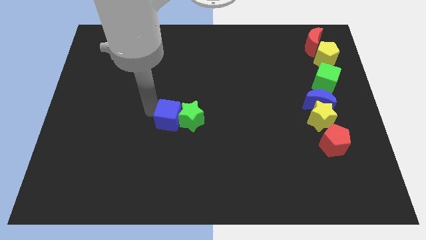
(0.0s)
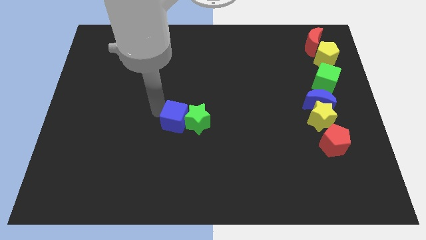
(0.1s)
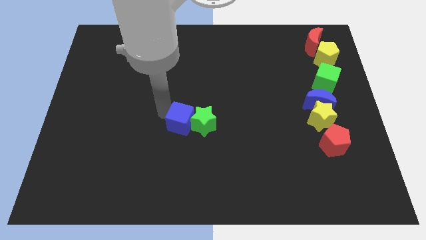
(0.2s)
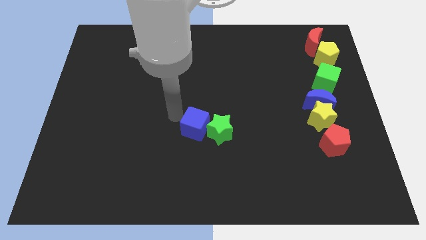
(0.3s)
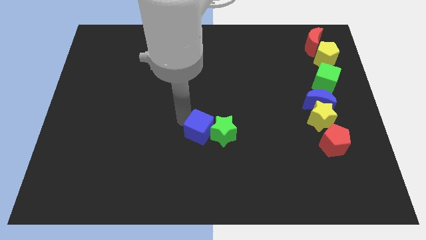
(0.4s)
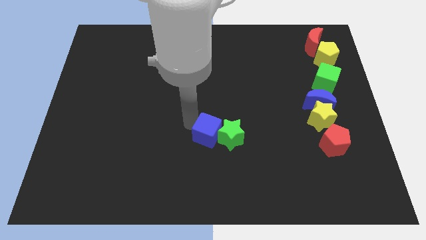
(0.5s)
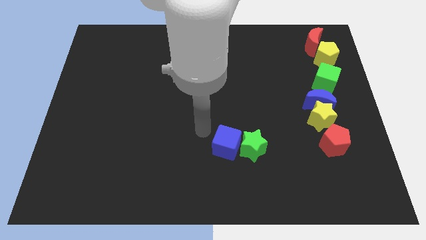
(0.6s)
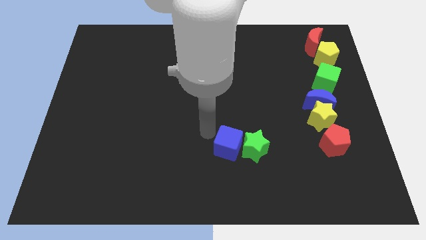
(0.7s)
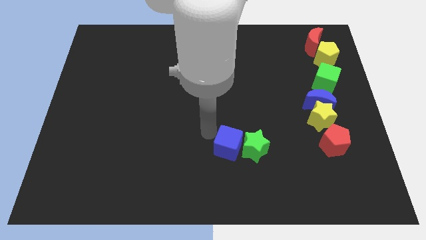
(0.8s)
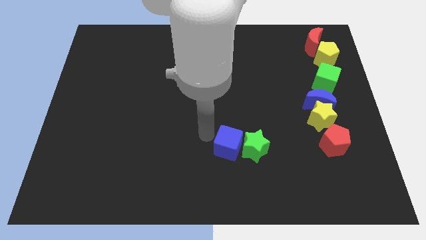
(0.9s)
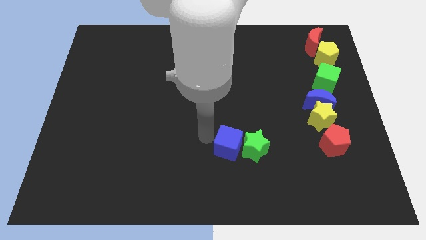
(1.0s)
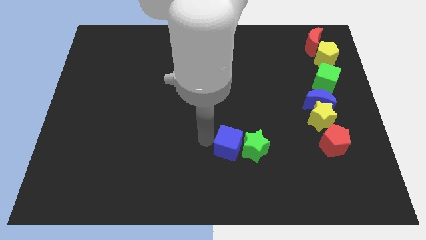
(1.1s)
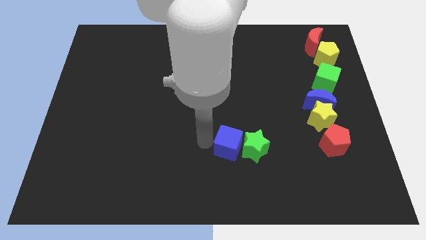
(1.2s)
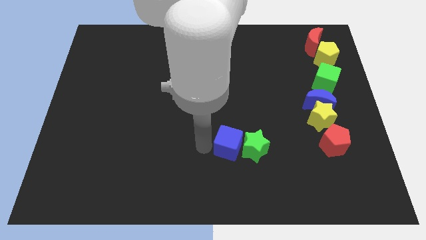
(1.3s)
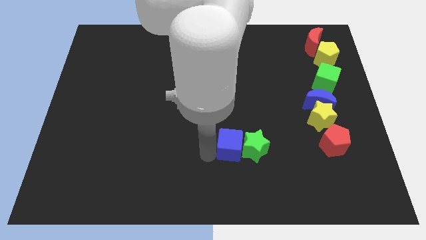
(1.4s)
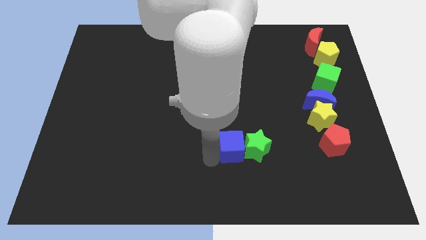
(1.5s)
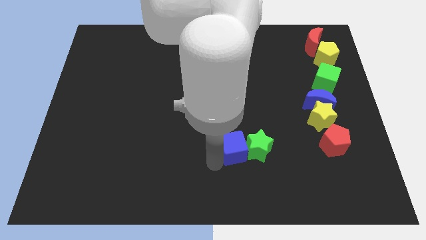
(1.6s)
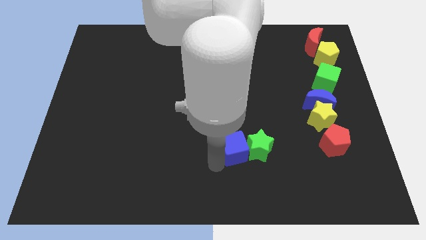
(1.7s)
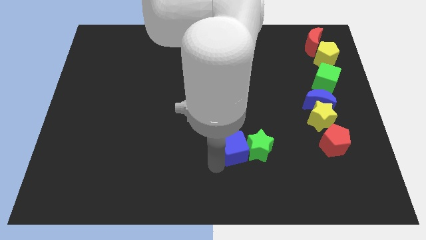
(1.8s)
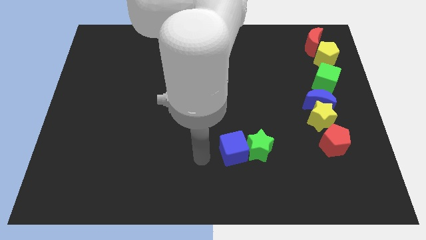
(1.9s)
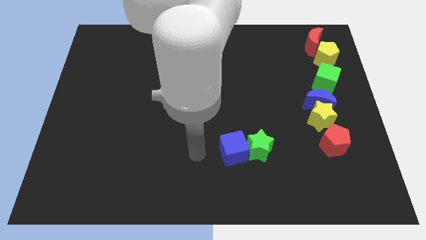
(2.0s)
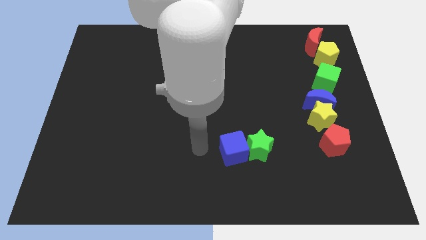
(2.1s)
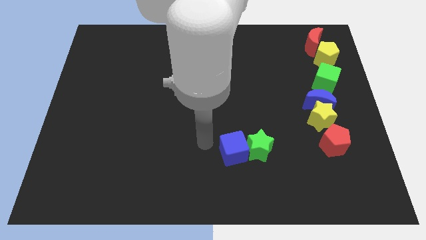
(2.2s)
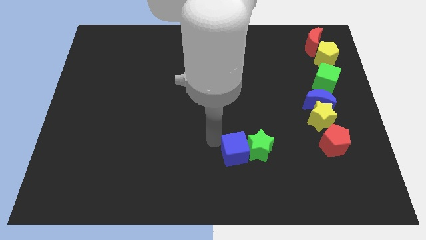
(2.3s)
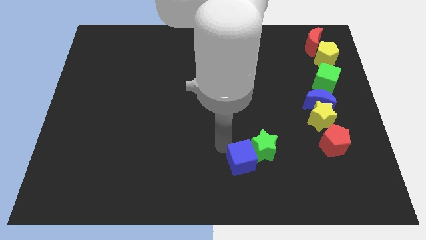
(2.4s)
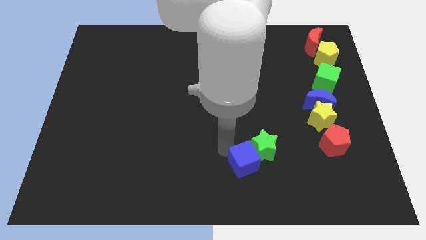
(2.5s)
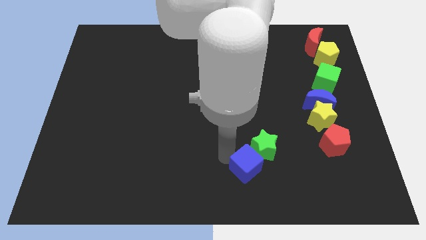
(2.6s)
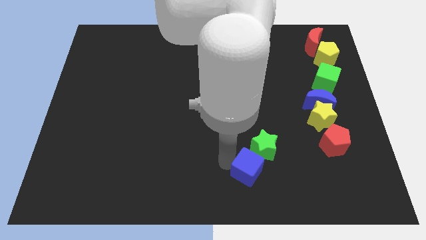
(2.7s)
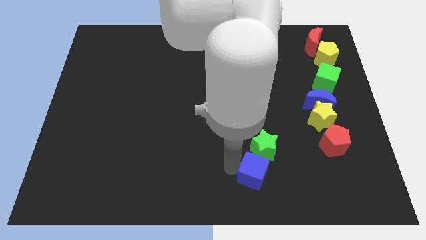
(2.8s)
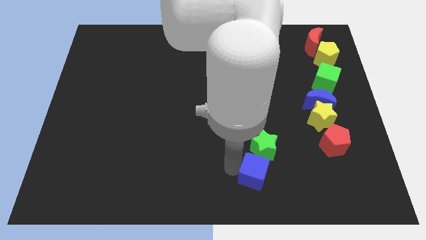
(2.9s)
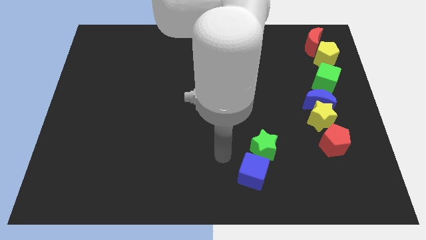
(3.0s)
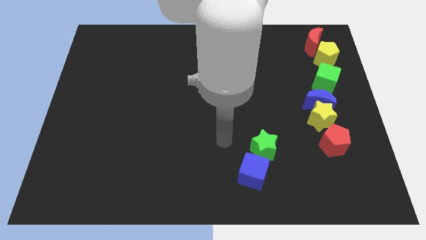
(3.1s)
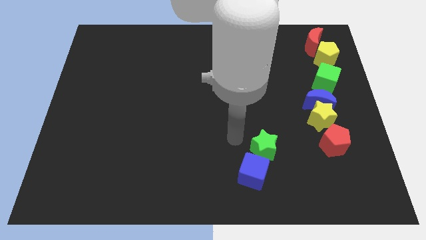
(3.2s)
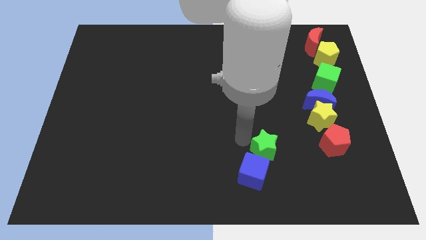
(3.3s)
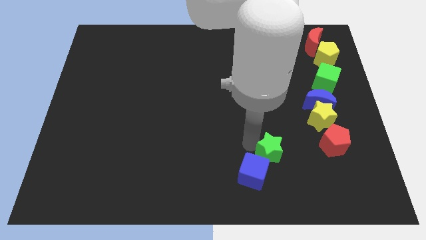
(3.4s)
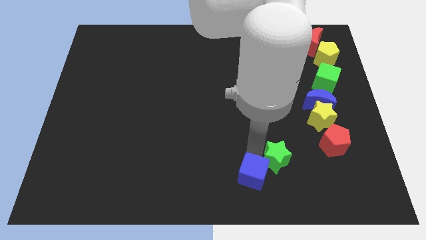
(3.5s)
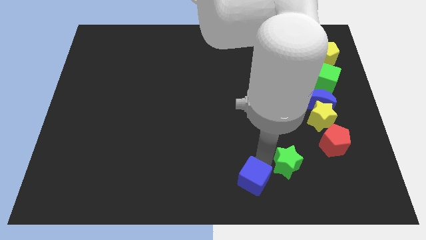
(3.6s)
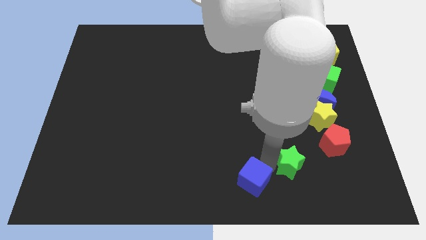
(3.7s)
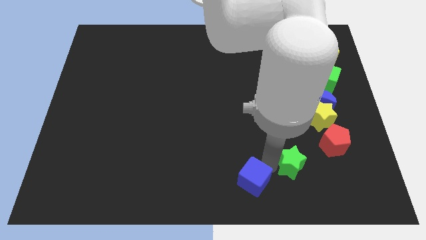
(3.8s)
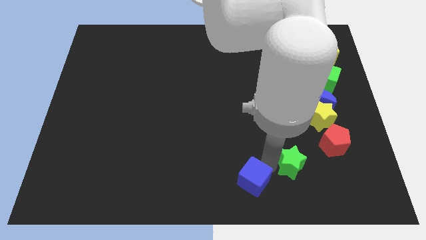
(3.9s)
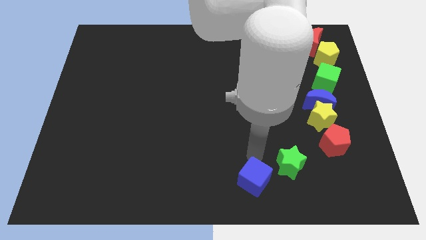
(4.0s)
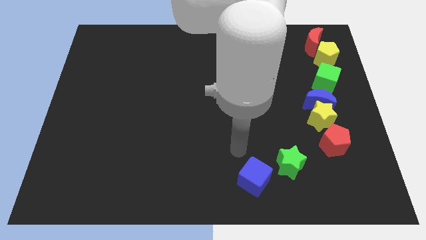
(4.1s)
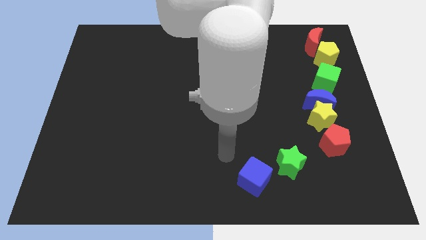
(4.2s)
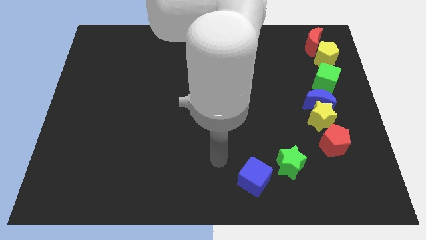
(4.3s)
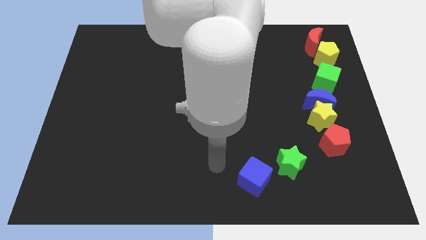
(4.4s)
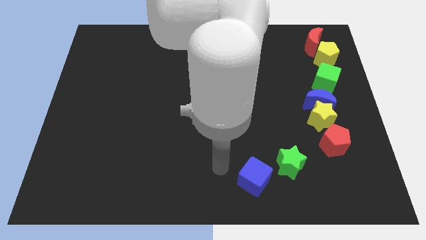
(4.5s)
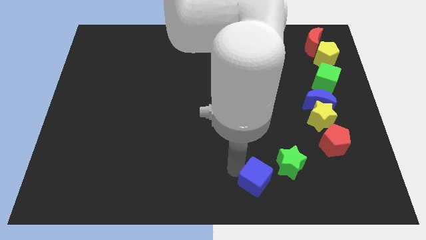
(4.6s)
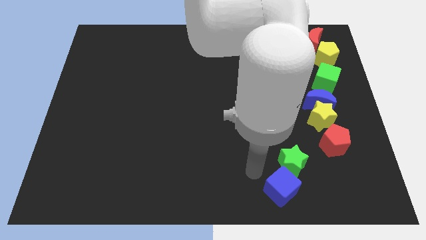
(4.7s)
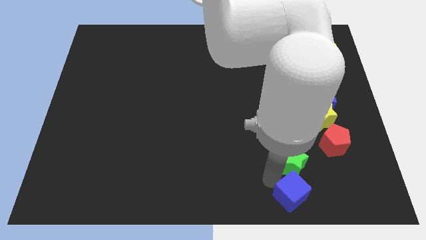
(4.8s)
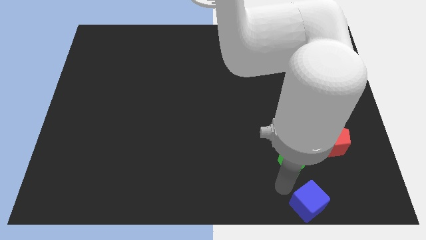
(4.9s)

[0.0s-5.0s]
push the blue cube to the bottom of the board

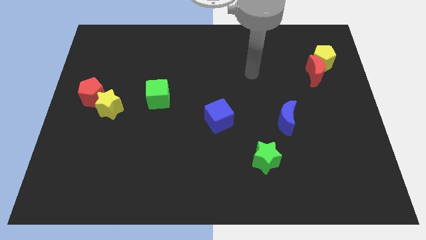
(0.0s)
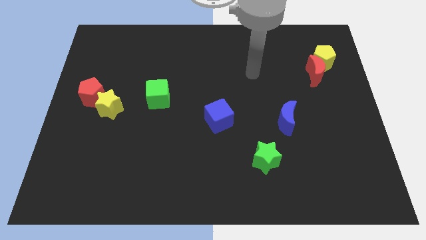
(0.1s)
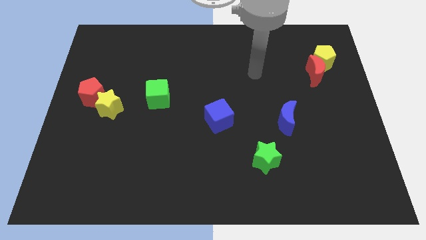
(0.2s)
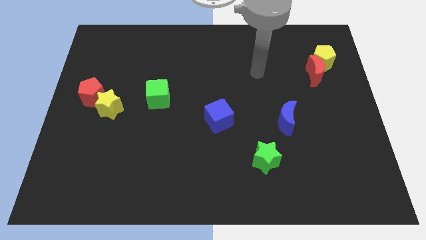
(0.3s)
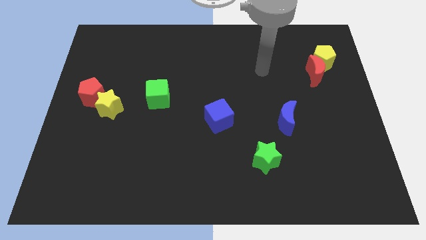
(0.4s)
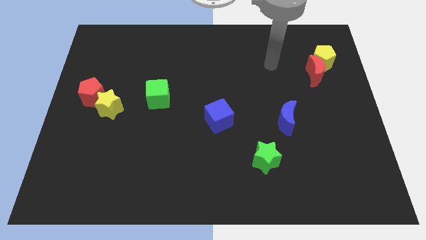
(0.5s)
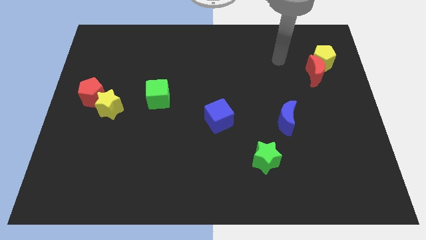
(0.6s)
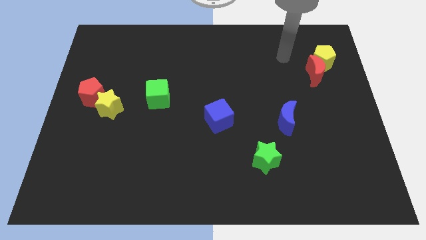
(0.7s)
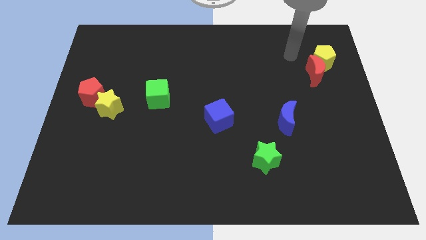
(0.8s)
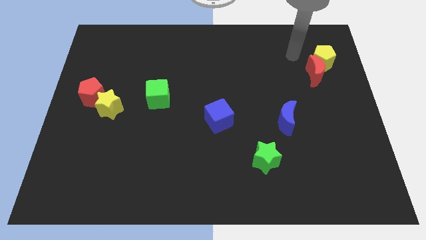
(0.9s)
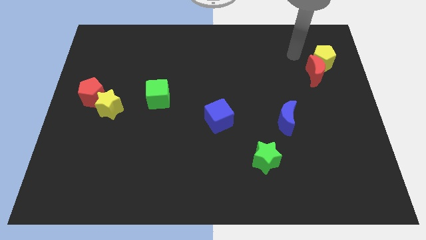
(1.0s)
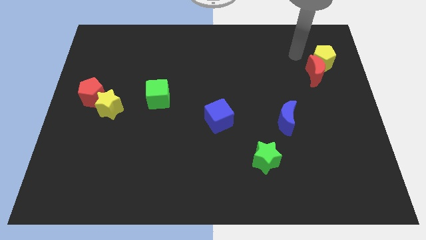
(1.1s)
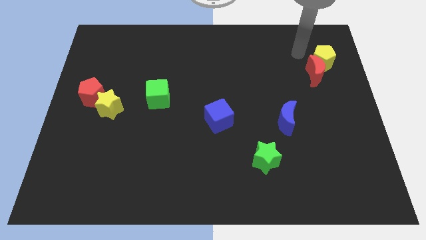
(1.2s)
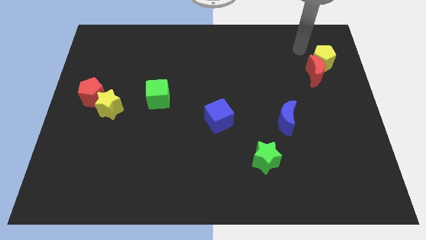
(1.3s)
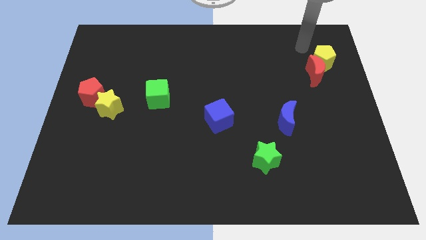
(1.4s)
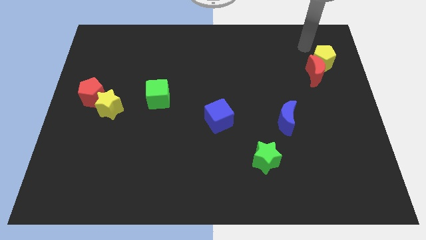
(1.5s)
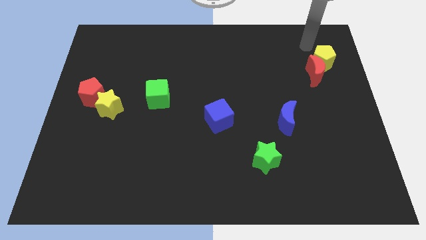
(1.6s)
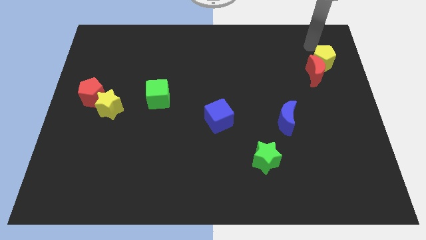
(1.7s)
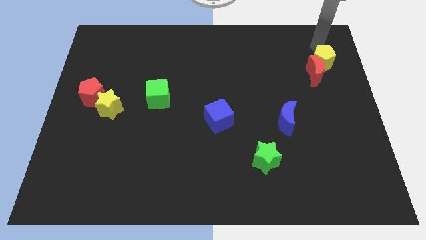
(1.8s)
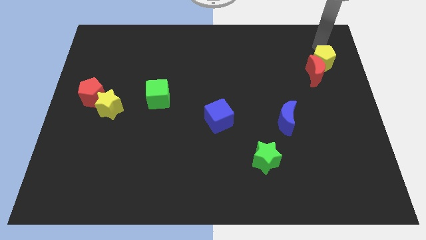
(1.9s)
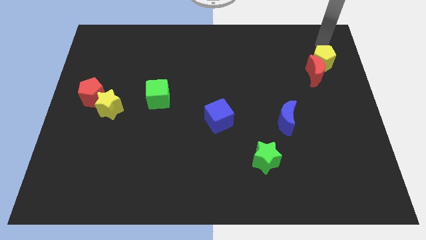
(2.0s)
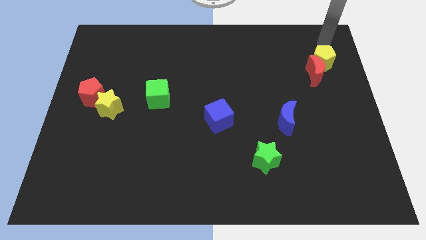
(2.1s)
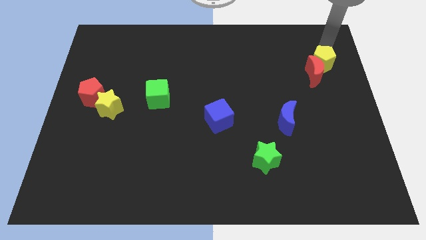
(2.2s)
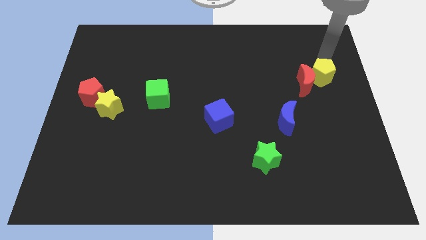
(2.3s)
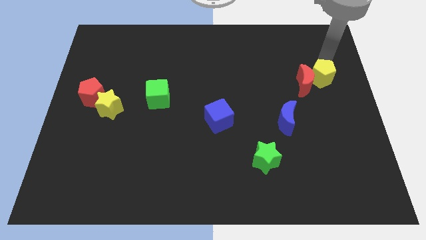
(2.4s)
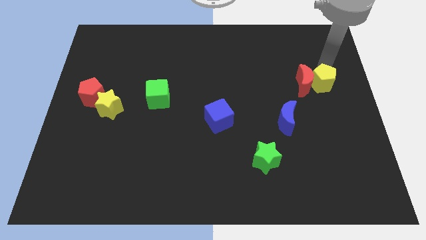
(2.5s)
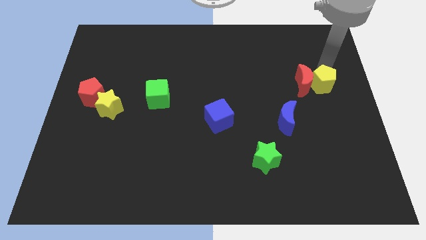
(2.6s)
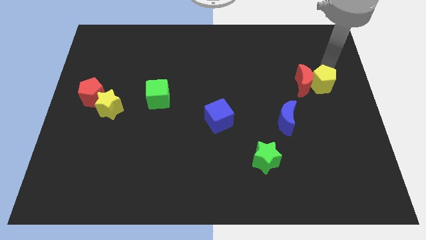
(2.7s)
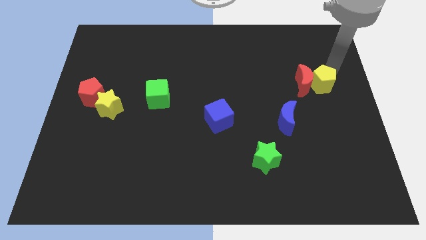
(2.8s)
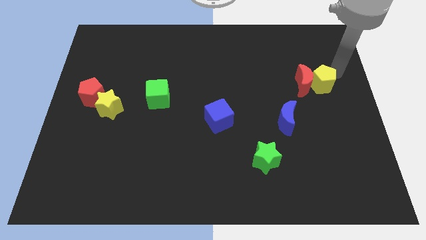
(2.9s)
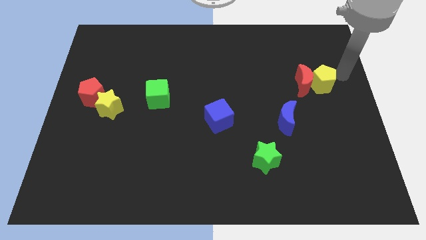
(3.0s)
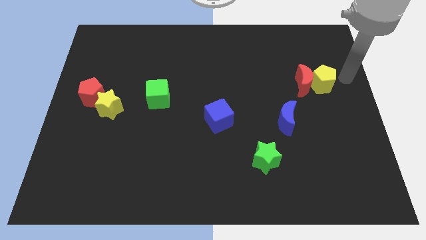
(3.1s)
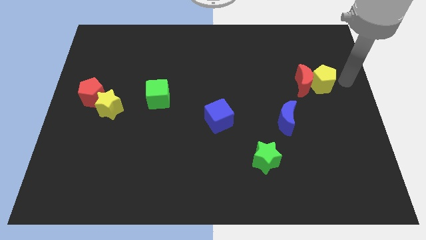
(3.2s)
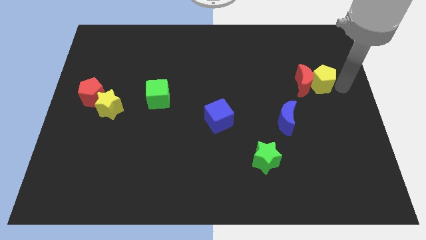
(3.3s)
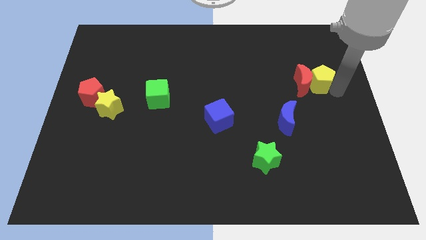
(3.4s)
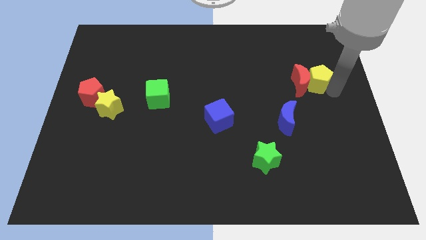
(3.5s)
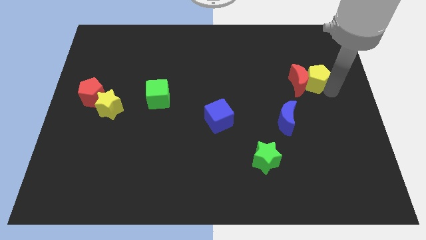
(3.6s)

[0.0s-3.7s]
push the yellow pentagon along with red crescent to the top of the blue crescent

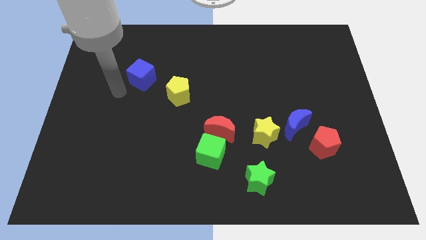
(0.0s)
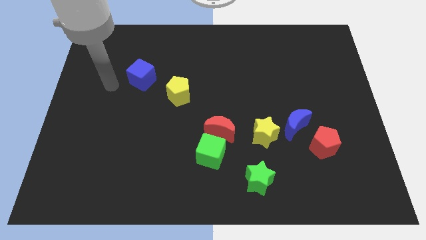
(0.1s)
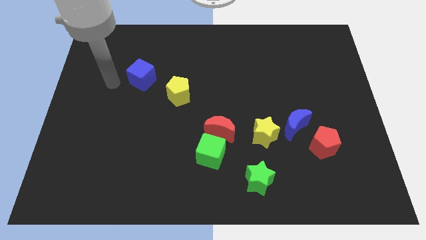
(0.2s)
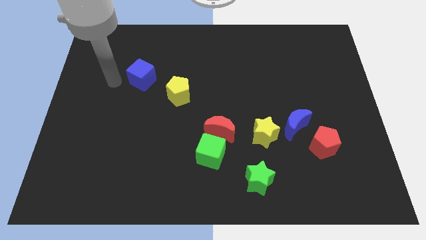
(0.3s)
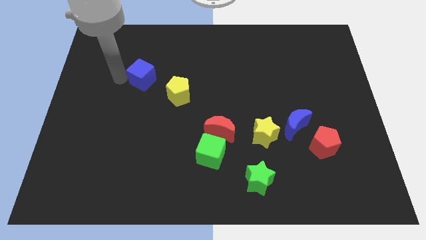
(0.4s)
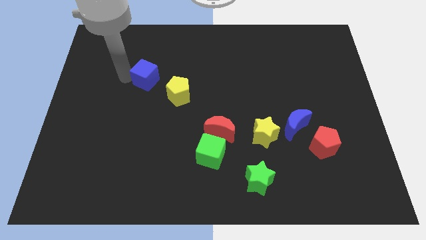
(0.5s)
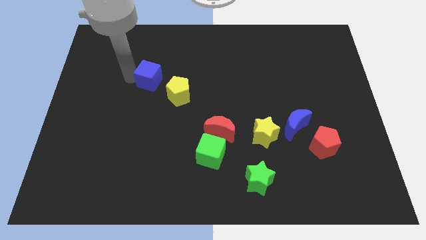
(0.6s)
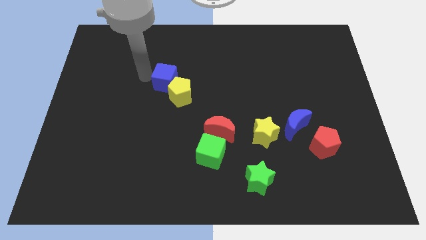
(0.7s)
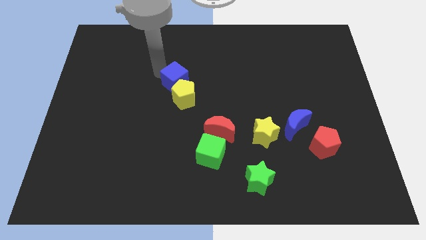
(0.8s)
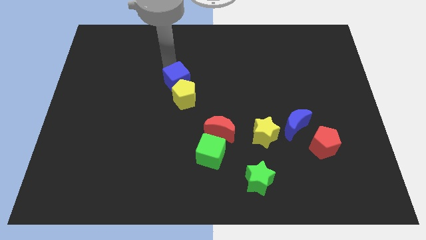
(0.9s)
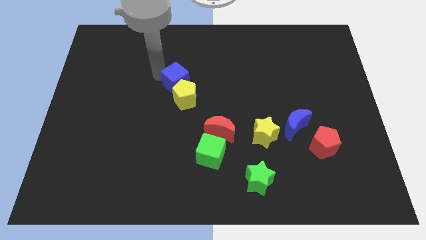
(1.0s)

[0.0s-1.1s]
move the blue cube into the yellow pentagon
